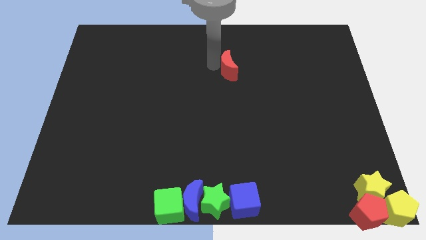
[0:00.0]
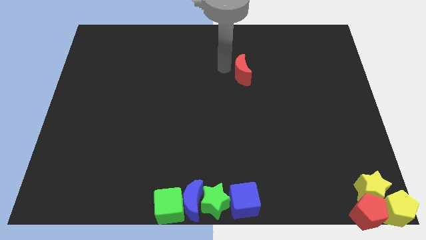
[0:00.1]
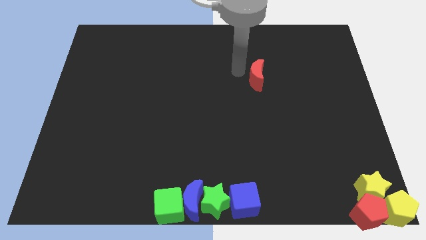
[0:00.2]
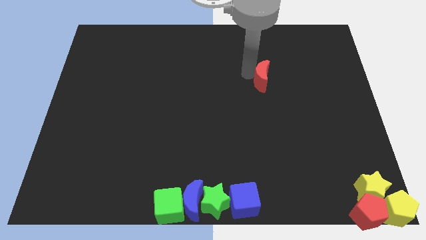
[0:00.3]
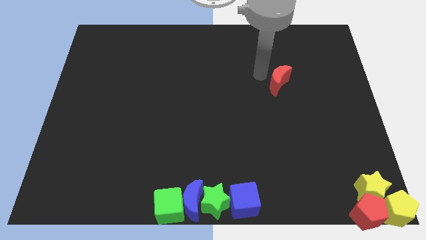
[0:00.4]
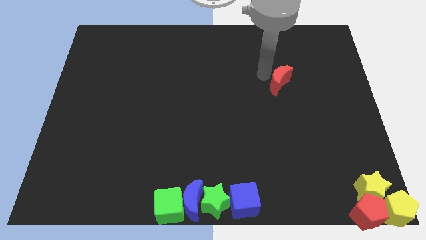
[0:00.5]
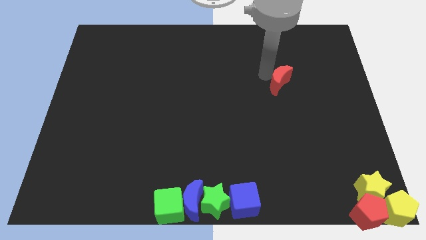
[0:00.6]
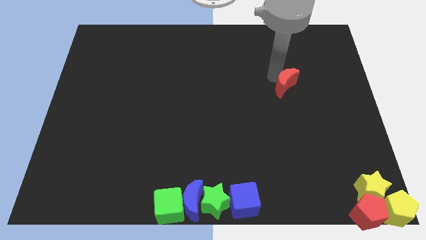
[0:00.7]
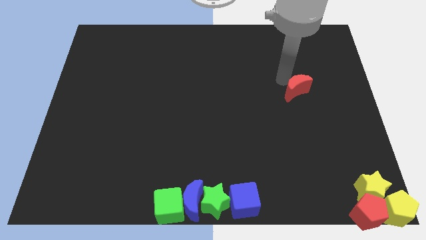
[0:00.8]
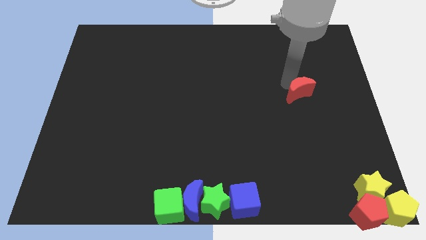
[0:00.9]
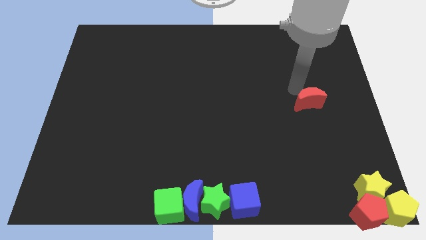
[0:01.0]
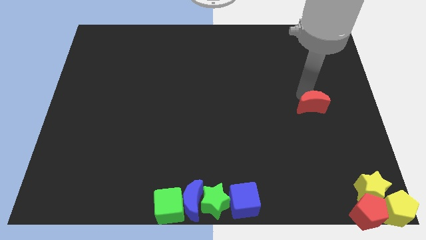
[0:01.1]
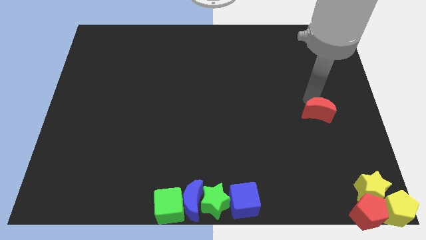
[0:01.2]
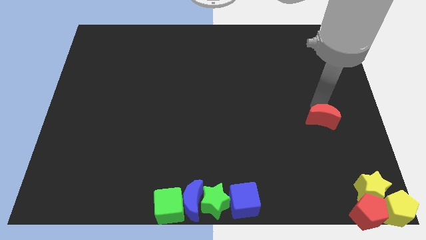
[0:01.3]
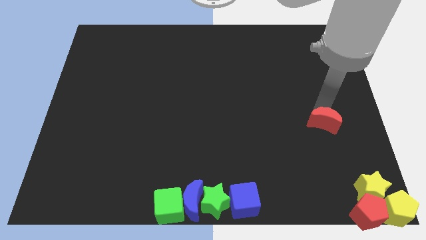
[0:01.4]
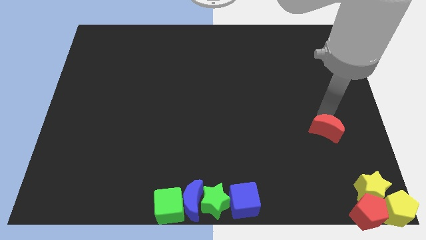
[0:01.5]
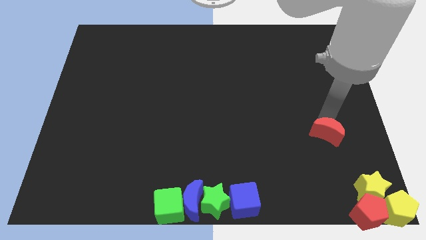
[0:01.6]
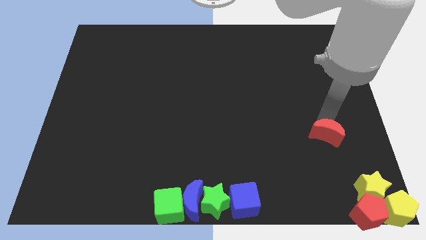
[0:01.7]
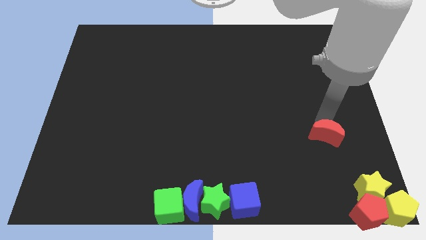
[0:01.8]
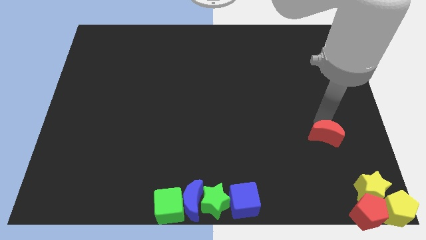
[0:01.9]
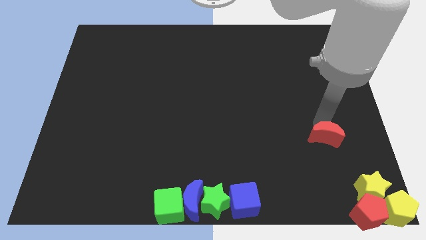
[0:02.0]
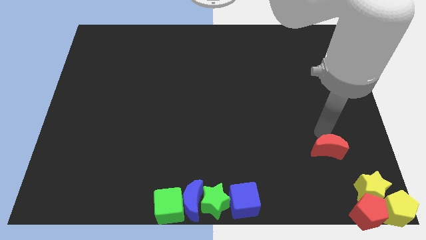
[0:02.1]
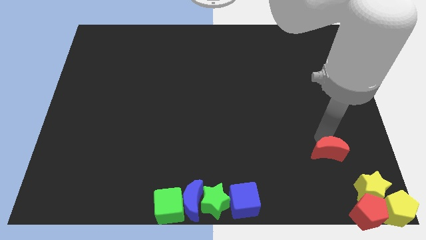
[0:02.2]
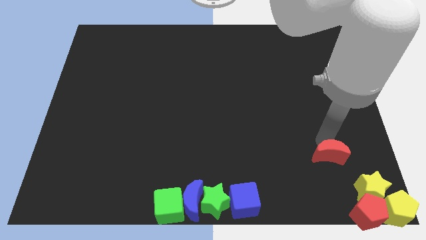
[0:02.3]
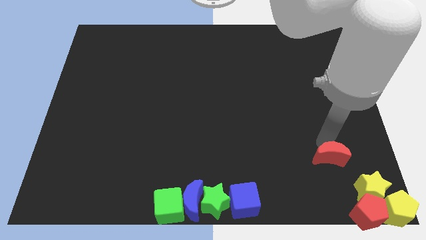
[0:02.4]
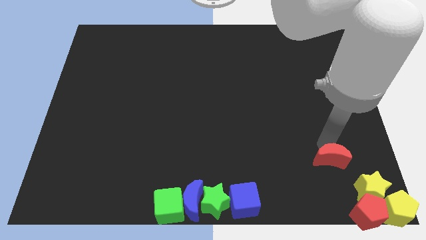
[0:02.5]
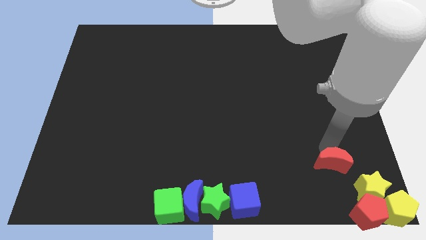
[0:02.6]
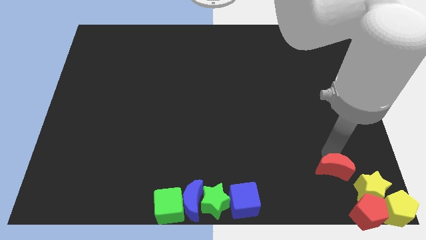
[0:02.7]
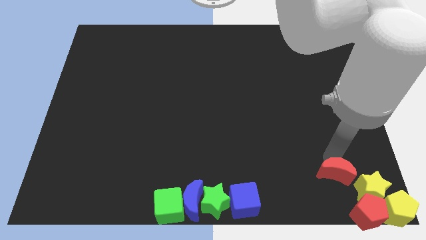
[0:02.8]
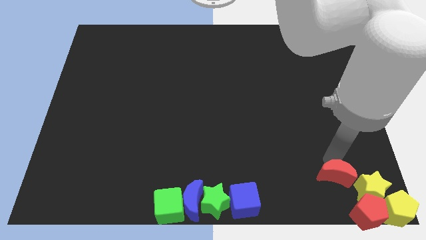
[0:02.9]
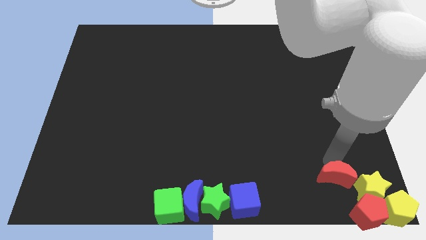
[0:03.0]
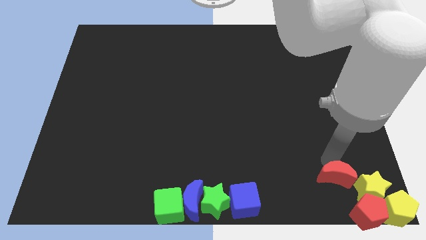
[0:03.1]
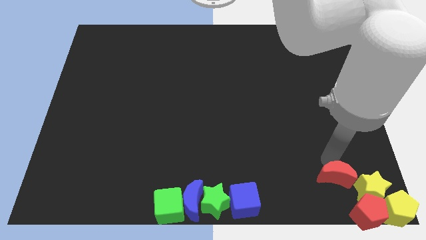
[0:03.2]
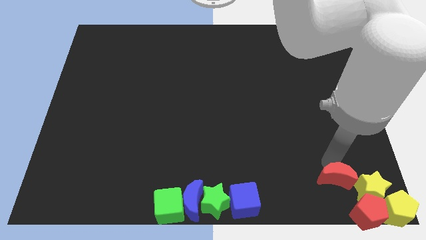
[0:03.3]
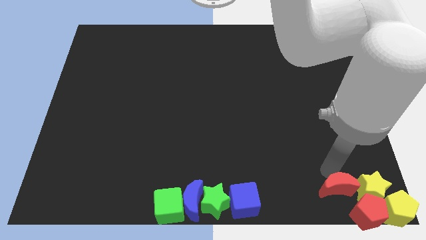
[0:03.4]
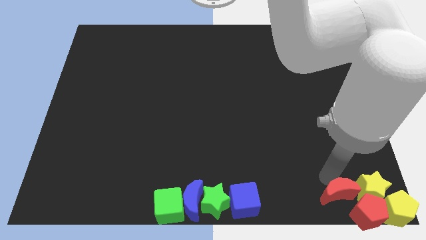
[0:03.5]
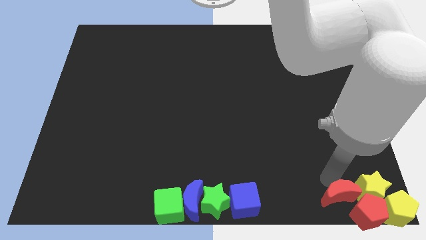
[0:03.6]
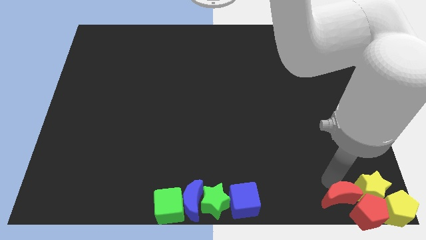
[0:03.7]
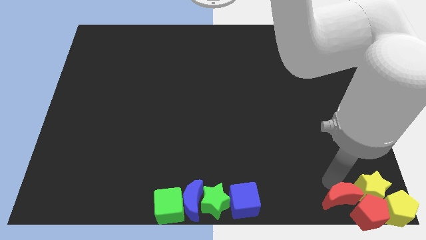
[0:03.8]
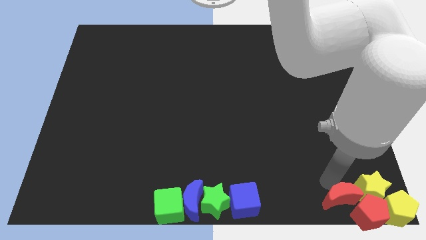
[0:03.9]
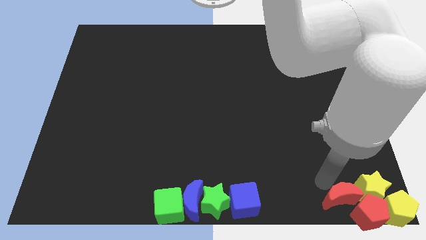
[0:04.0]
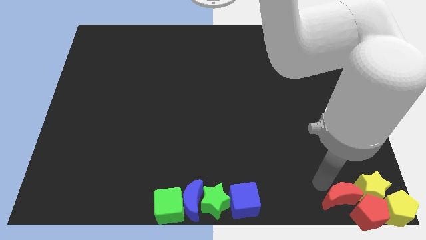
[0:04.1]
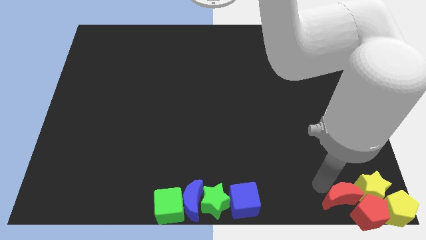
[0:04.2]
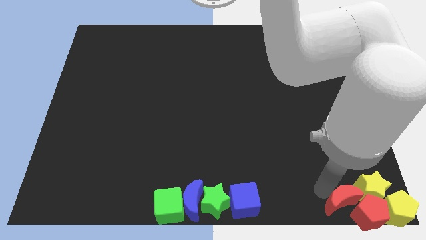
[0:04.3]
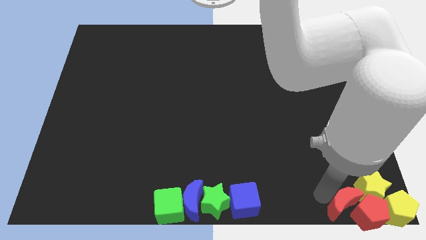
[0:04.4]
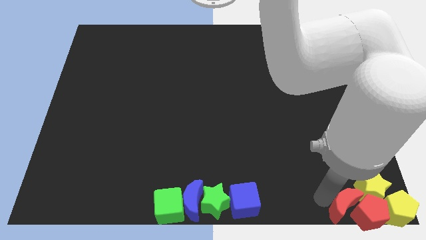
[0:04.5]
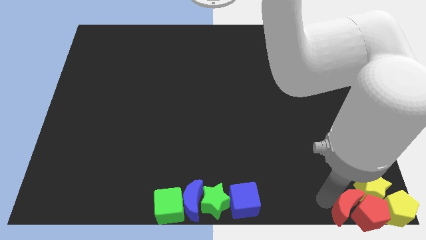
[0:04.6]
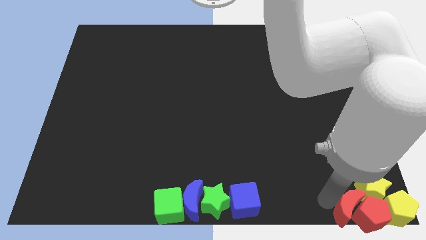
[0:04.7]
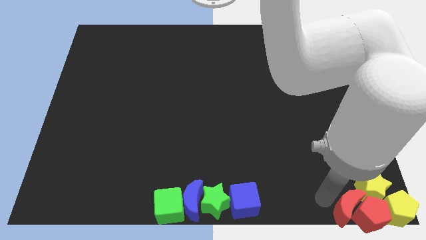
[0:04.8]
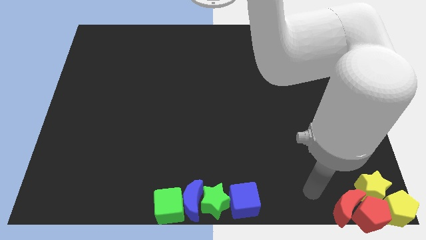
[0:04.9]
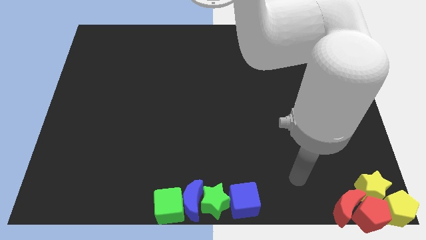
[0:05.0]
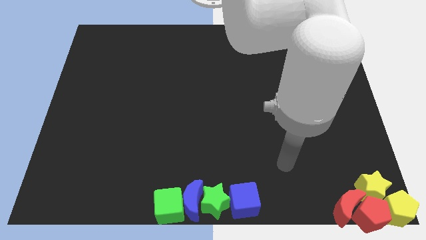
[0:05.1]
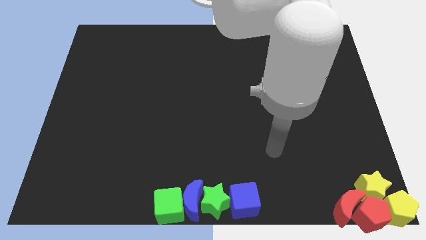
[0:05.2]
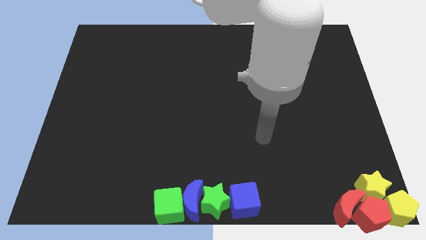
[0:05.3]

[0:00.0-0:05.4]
push thee red crescent into the red pentagon

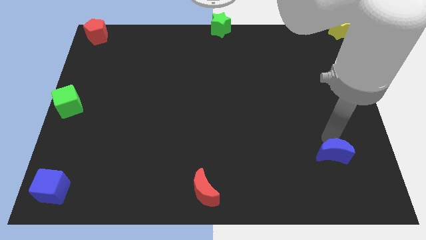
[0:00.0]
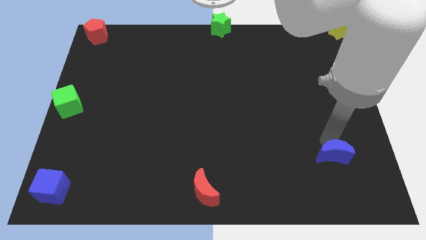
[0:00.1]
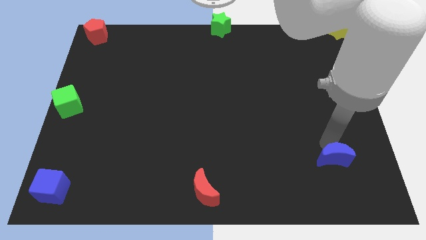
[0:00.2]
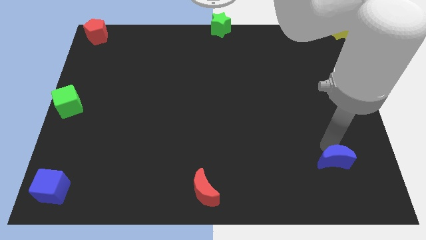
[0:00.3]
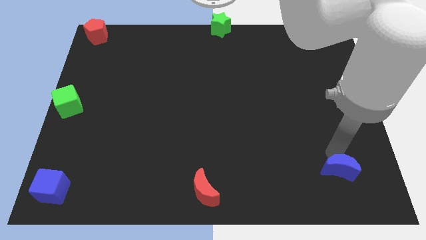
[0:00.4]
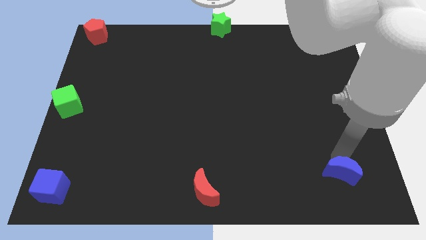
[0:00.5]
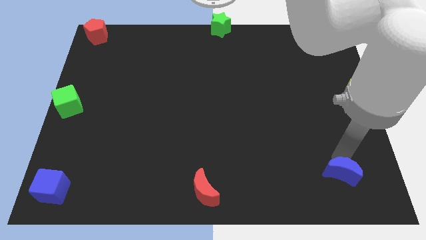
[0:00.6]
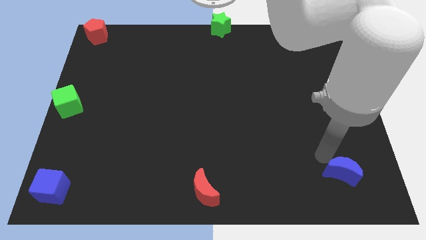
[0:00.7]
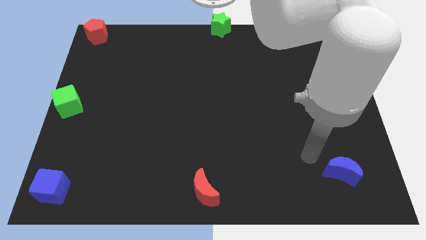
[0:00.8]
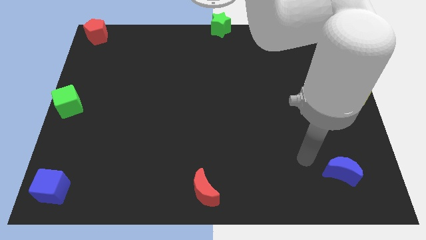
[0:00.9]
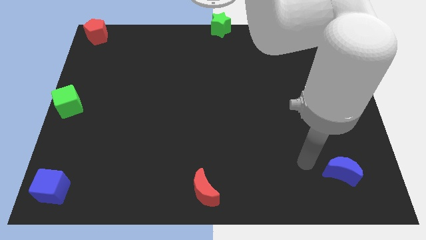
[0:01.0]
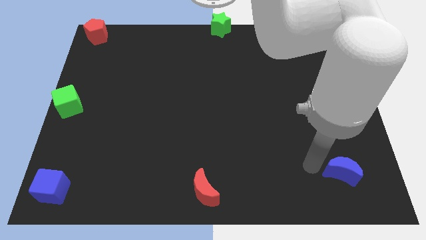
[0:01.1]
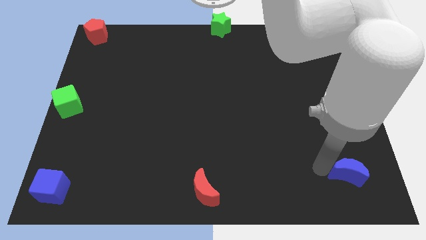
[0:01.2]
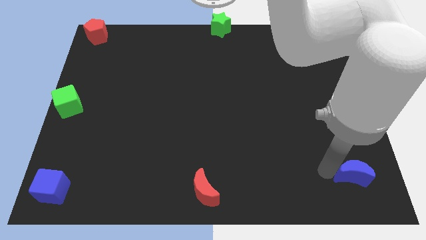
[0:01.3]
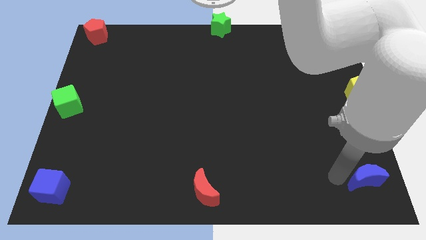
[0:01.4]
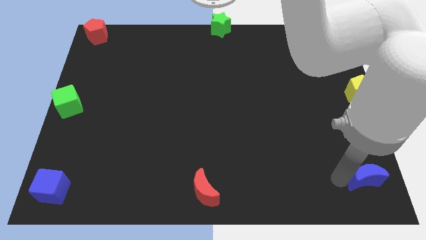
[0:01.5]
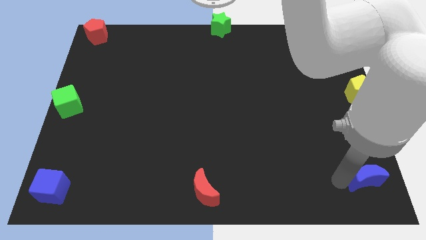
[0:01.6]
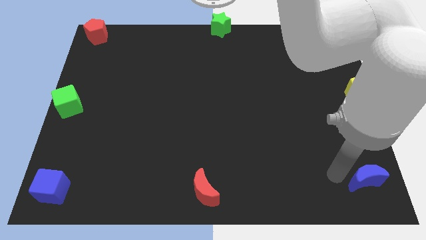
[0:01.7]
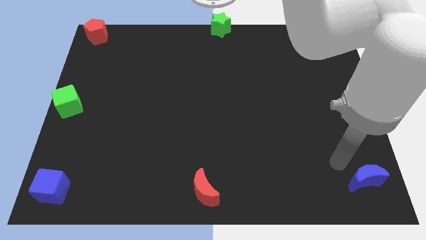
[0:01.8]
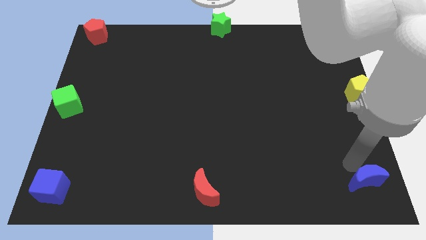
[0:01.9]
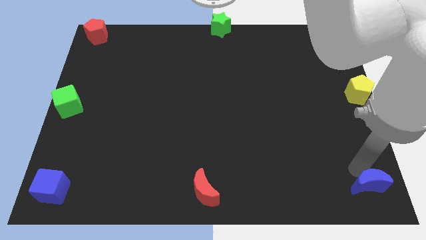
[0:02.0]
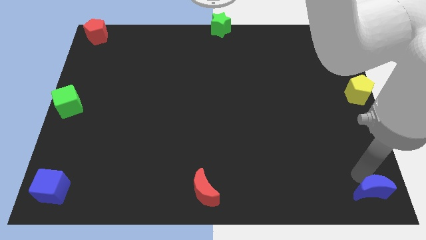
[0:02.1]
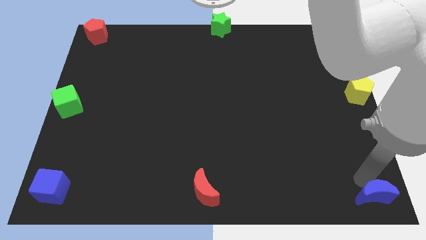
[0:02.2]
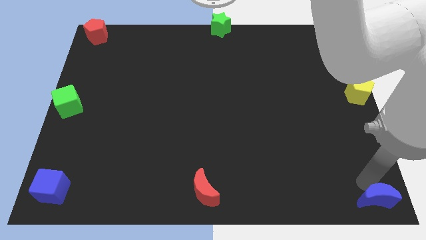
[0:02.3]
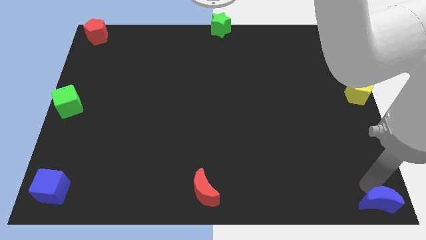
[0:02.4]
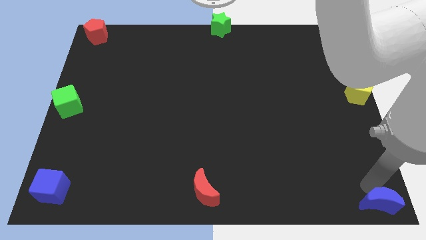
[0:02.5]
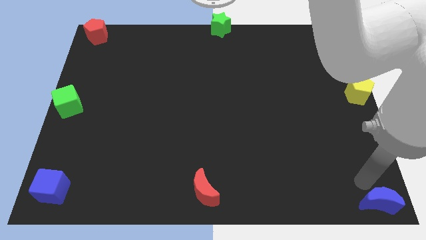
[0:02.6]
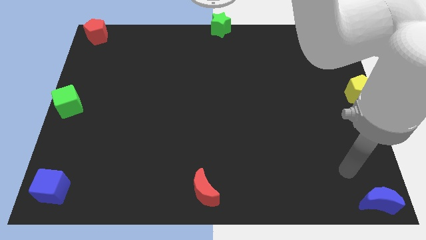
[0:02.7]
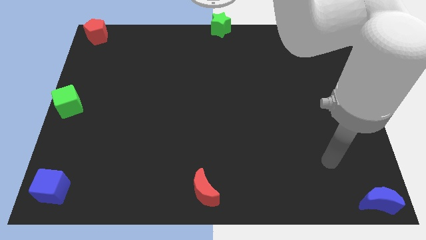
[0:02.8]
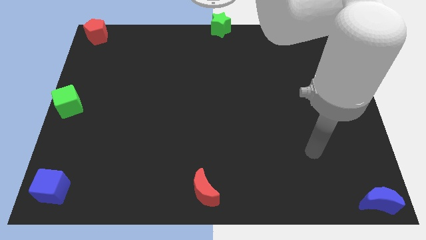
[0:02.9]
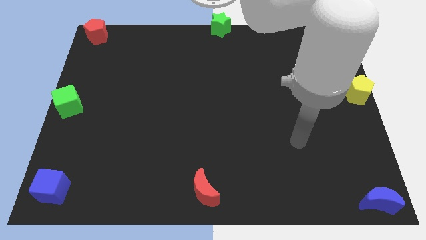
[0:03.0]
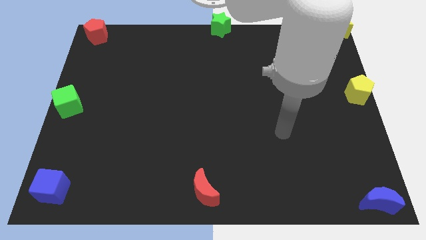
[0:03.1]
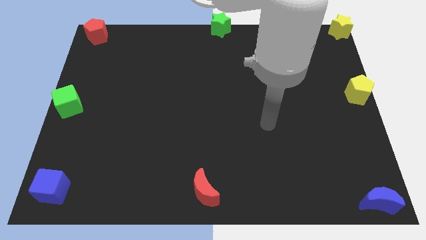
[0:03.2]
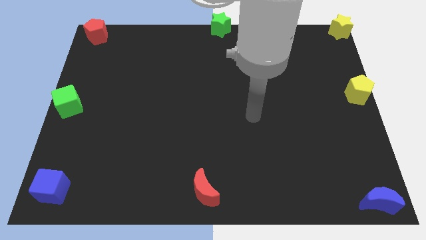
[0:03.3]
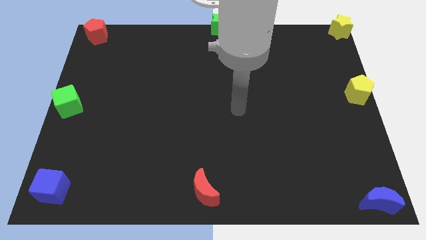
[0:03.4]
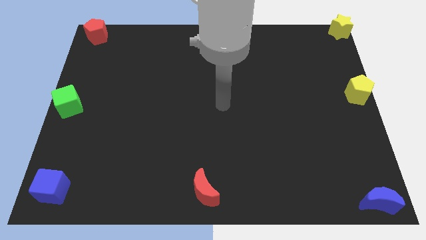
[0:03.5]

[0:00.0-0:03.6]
place the blue moon to the bottom right corner of the board

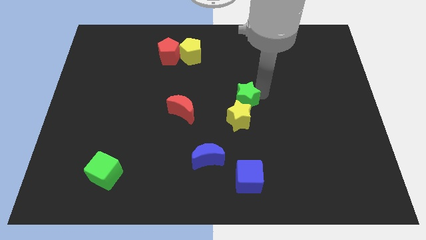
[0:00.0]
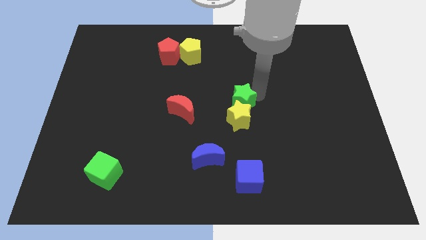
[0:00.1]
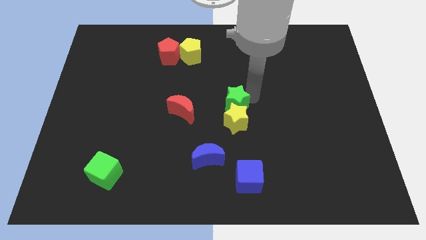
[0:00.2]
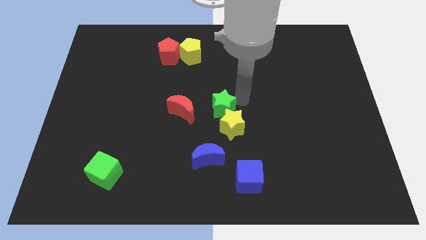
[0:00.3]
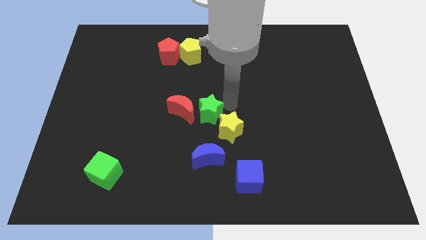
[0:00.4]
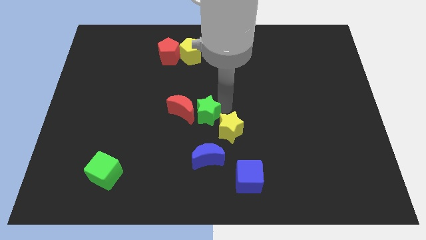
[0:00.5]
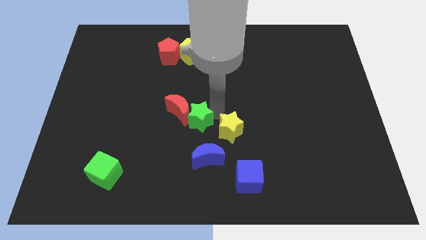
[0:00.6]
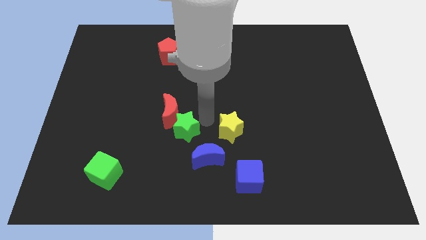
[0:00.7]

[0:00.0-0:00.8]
separate the green star and yellow star
